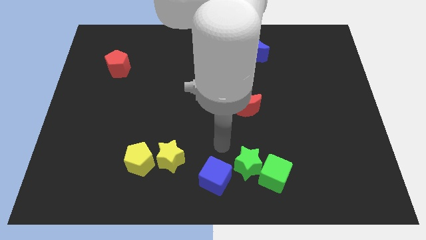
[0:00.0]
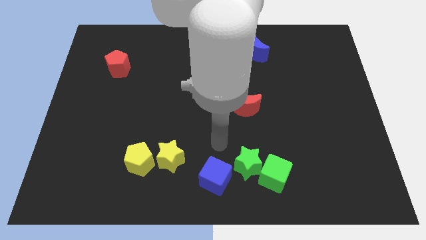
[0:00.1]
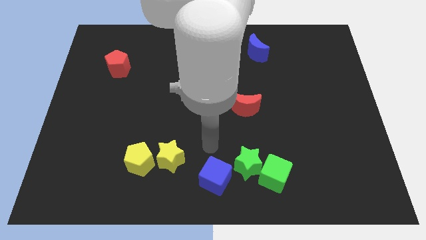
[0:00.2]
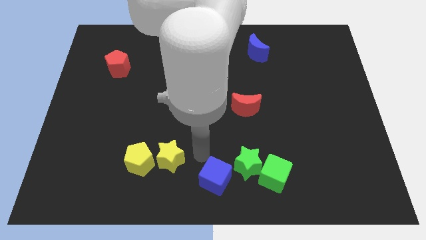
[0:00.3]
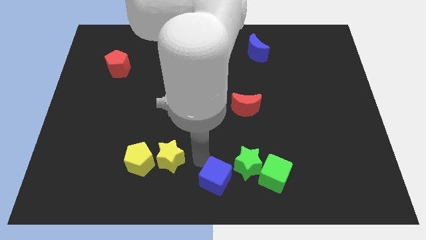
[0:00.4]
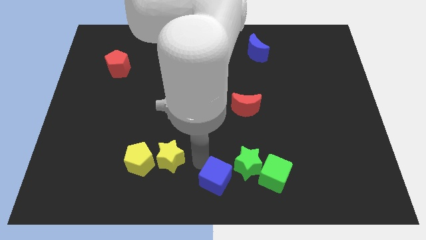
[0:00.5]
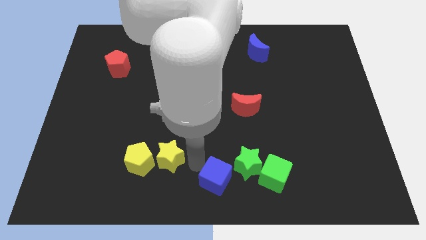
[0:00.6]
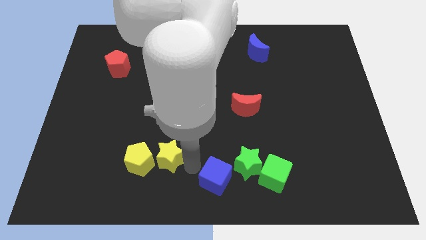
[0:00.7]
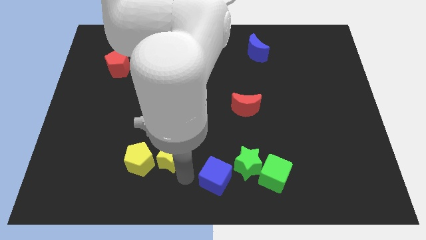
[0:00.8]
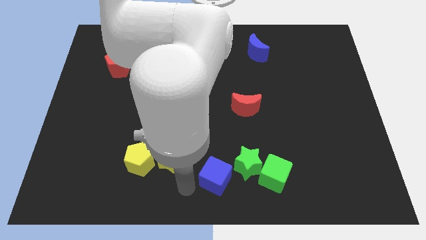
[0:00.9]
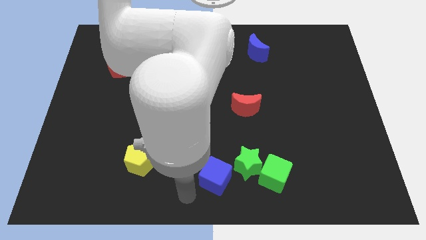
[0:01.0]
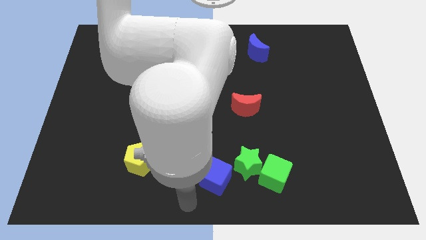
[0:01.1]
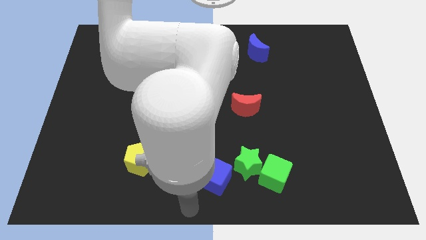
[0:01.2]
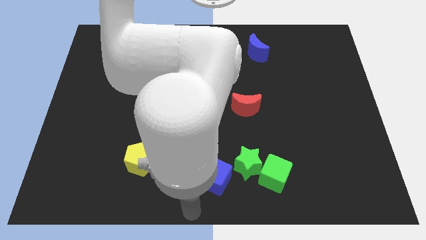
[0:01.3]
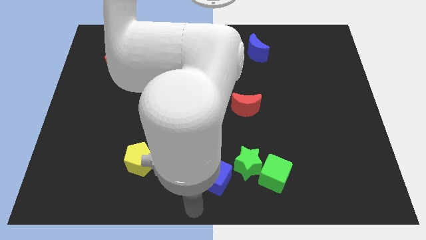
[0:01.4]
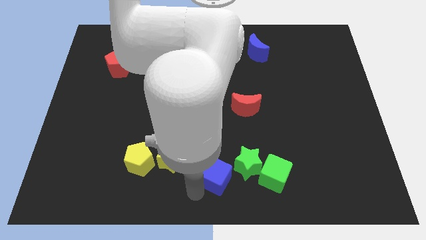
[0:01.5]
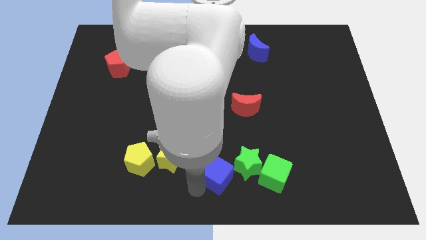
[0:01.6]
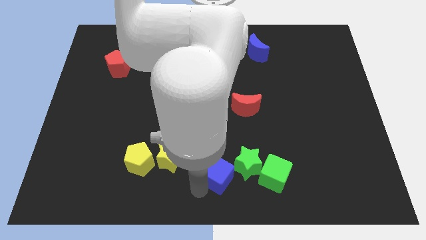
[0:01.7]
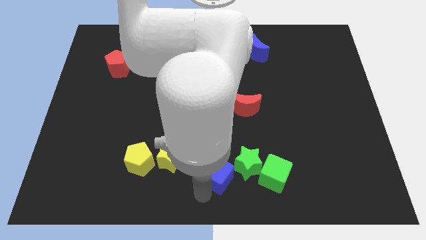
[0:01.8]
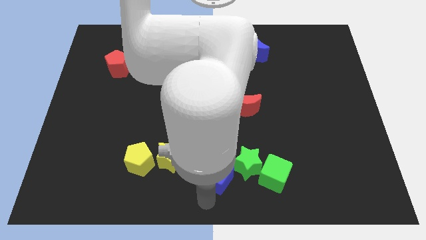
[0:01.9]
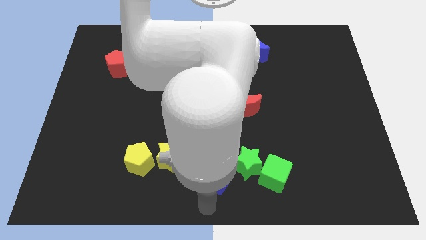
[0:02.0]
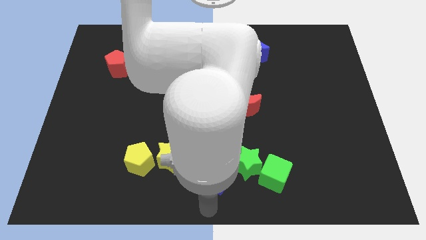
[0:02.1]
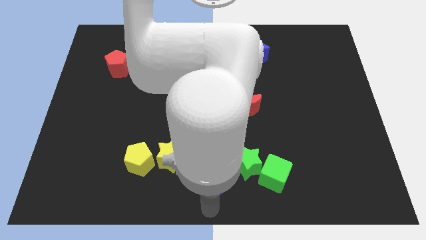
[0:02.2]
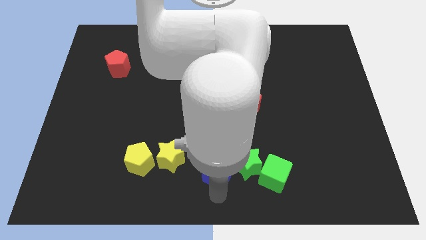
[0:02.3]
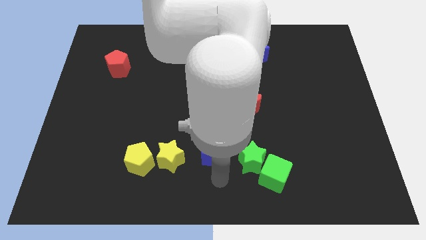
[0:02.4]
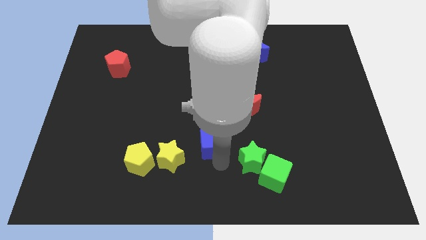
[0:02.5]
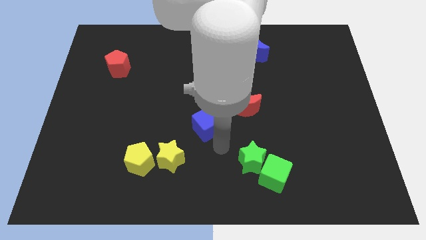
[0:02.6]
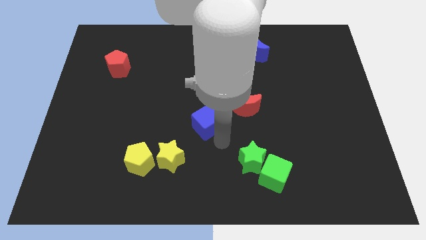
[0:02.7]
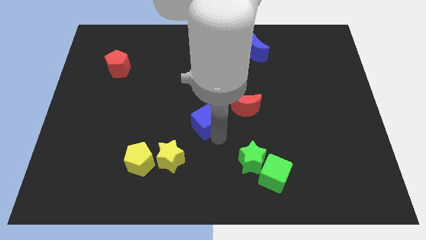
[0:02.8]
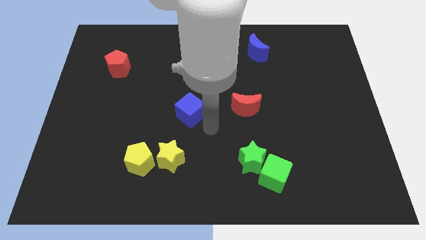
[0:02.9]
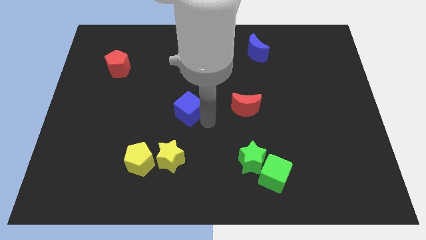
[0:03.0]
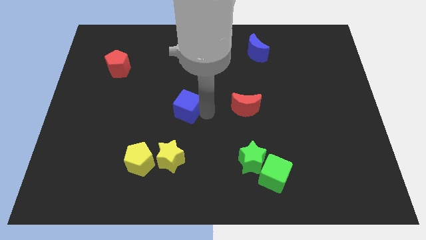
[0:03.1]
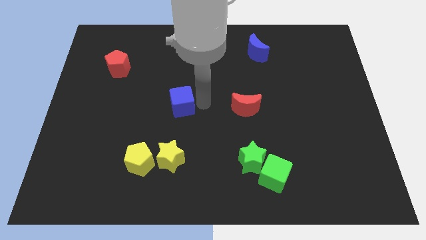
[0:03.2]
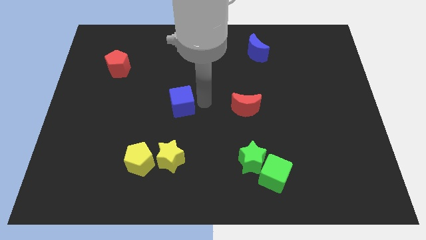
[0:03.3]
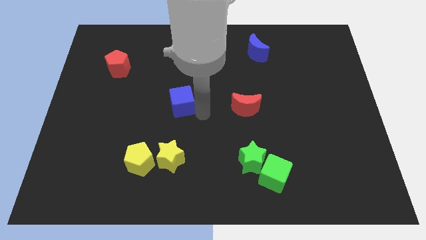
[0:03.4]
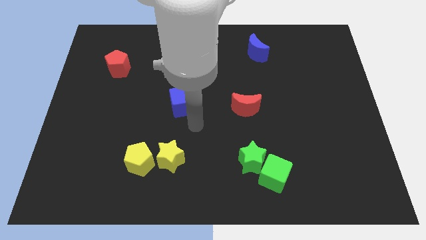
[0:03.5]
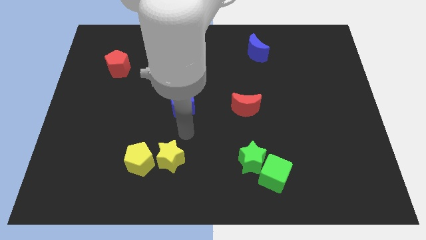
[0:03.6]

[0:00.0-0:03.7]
place the blue cube horizontally to the left side of the red moon

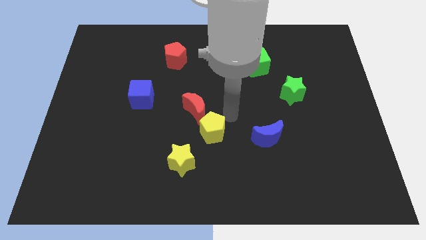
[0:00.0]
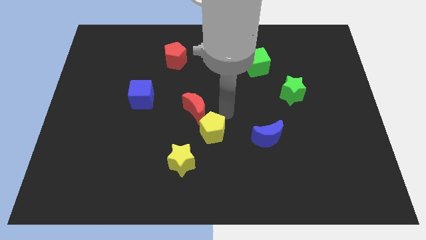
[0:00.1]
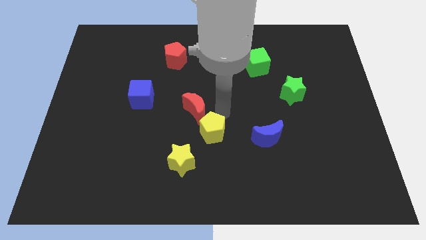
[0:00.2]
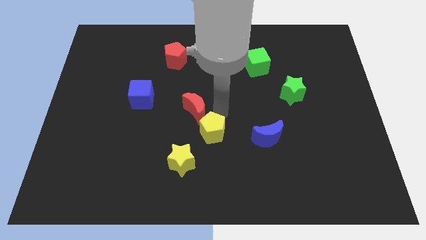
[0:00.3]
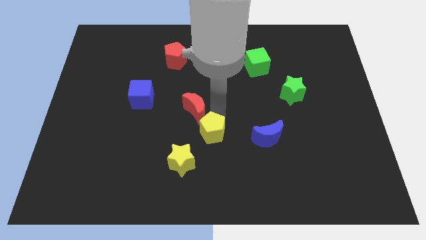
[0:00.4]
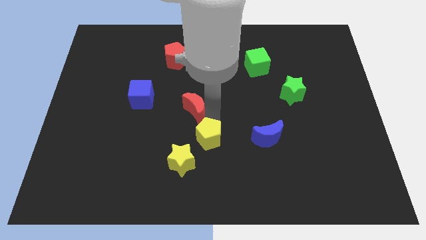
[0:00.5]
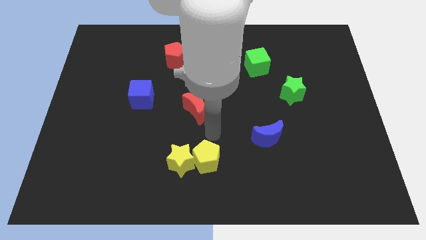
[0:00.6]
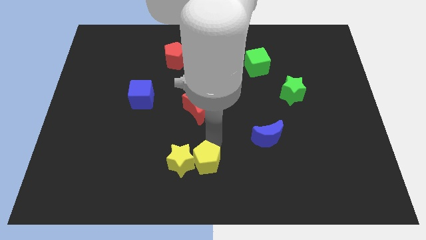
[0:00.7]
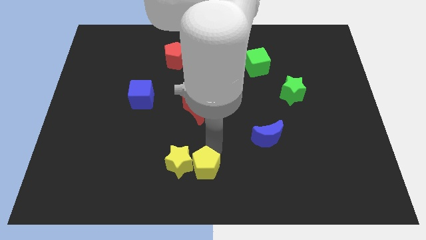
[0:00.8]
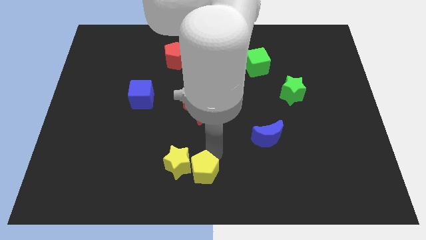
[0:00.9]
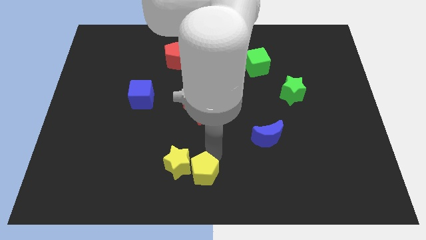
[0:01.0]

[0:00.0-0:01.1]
push yellow pentagon towards bottom center

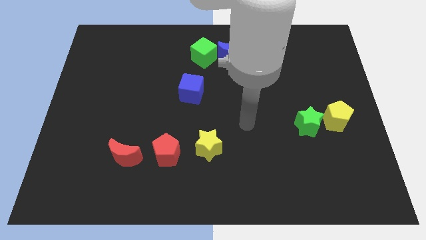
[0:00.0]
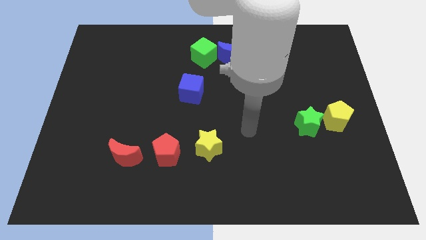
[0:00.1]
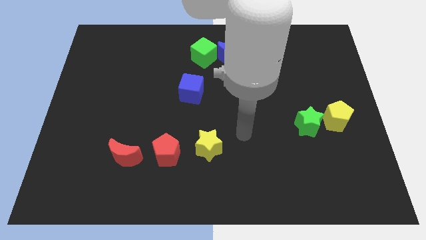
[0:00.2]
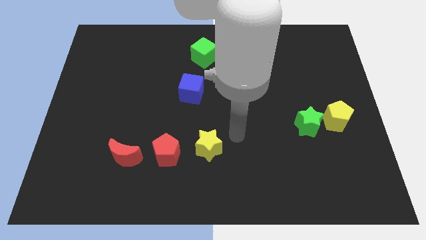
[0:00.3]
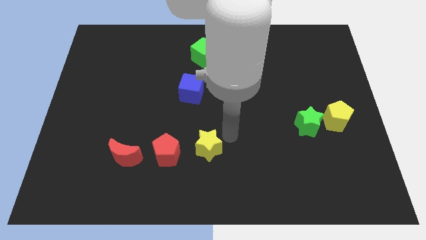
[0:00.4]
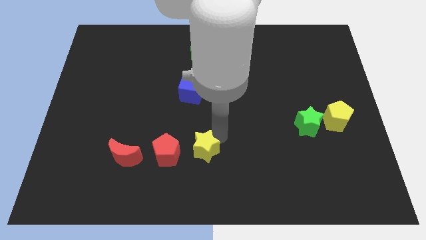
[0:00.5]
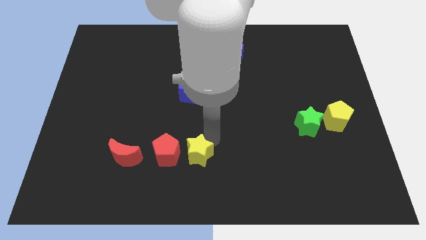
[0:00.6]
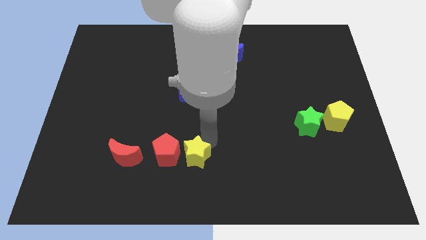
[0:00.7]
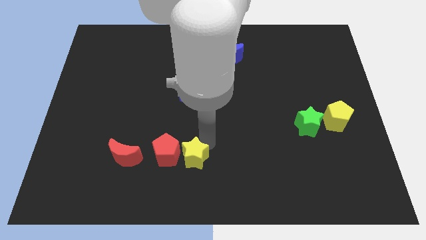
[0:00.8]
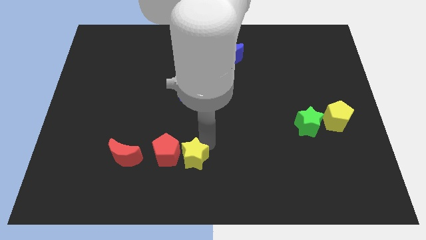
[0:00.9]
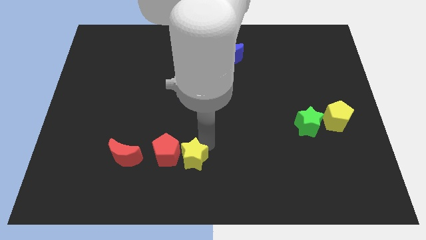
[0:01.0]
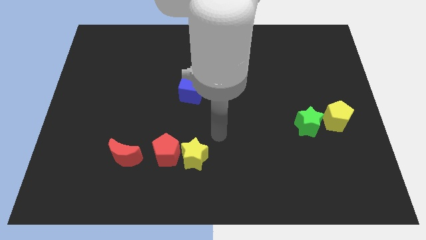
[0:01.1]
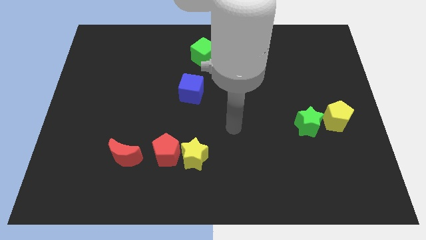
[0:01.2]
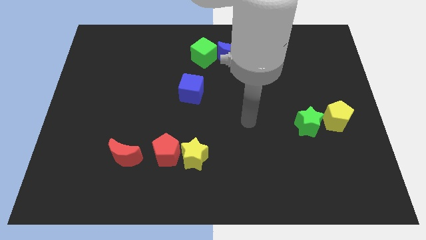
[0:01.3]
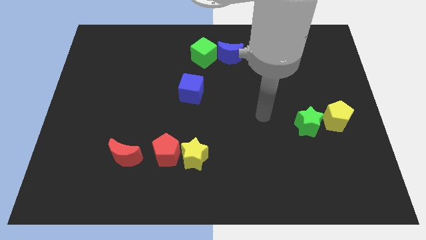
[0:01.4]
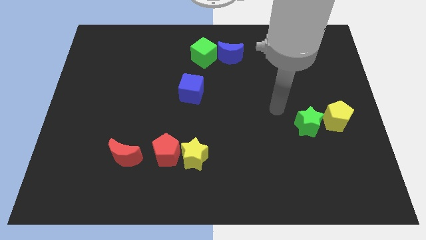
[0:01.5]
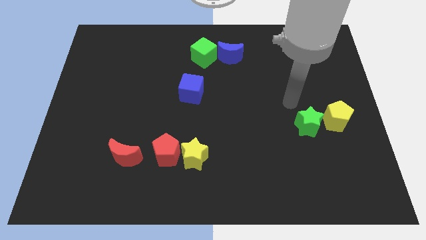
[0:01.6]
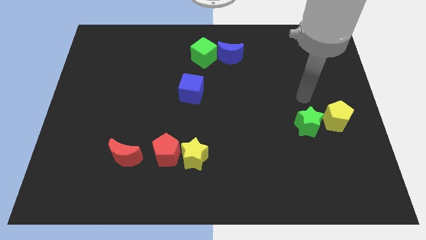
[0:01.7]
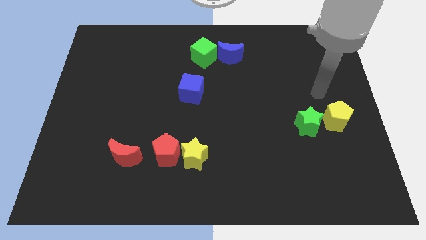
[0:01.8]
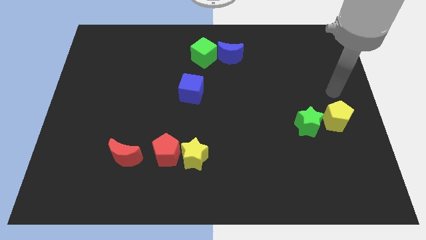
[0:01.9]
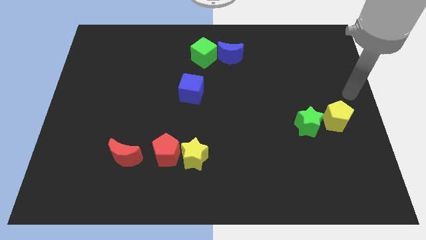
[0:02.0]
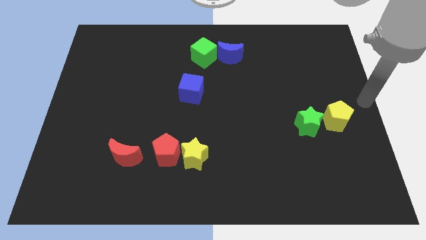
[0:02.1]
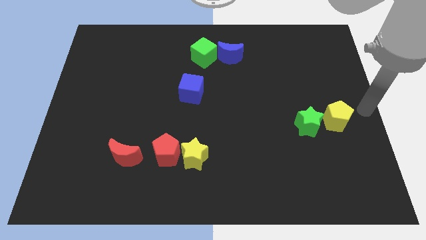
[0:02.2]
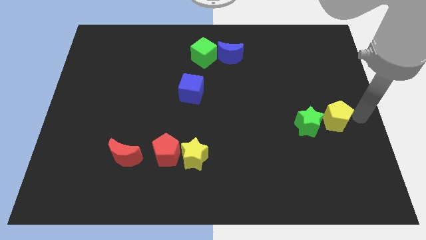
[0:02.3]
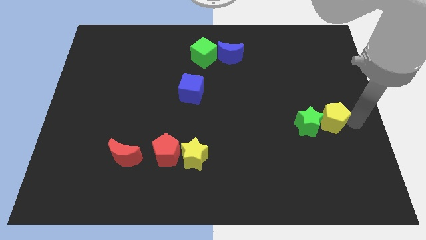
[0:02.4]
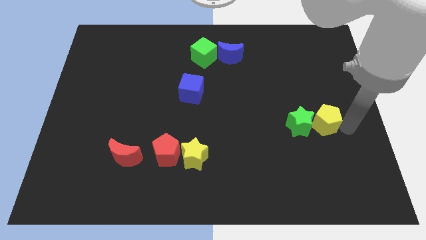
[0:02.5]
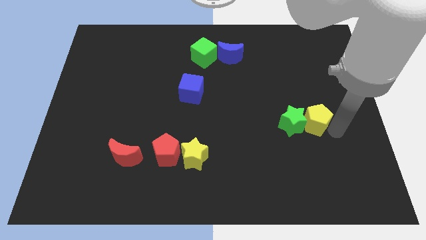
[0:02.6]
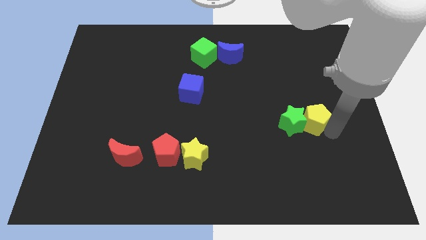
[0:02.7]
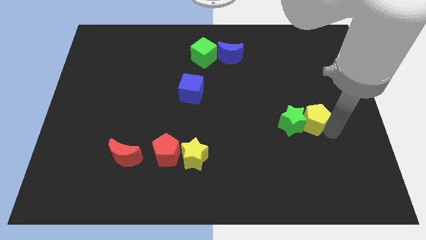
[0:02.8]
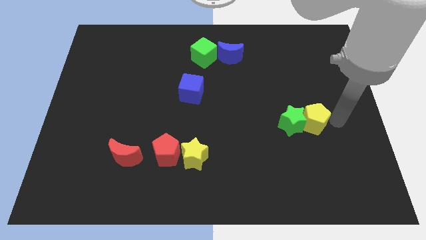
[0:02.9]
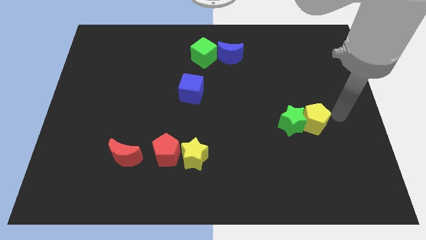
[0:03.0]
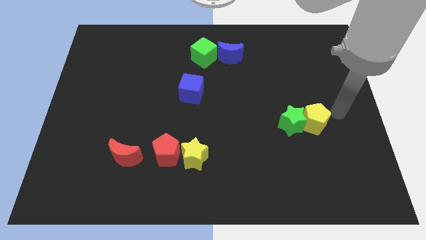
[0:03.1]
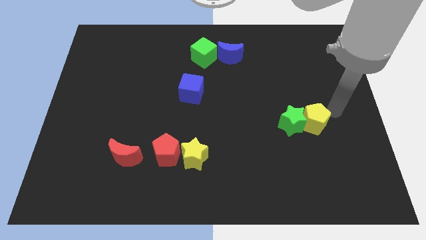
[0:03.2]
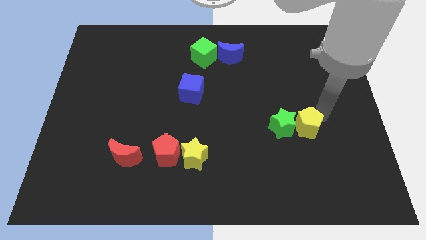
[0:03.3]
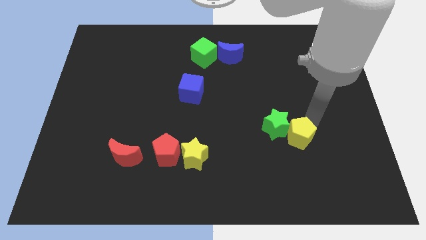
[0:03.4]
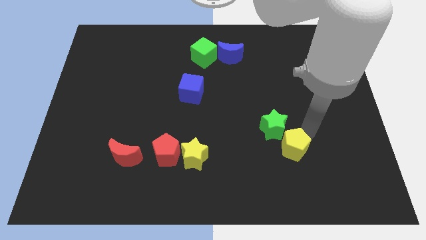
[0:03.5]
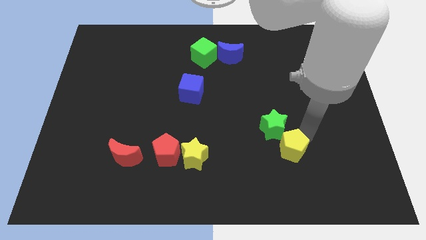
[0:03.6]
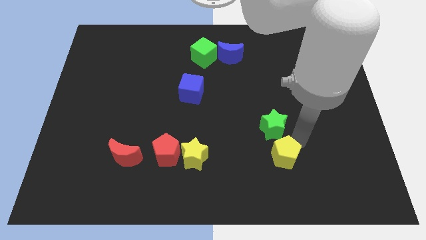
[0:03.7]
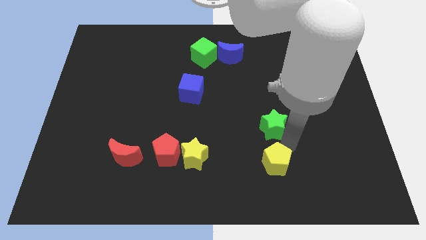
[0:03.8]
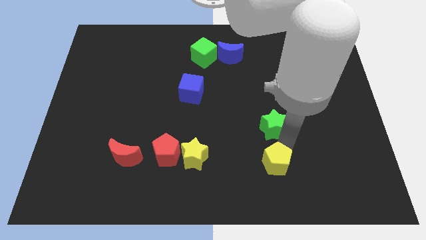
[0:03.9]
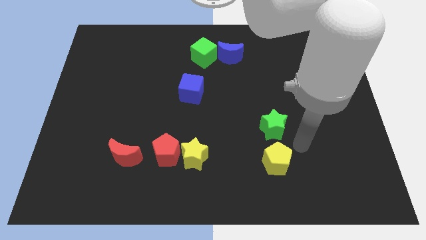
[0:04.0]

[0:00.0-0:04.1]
move the yellow pentagon adjacent to the yellow star
